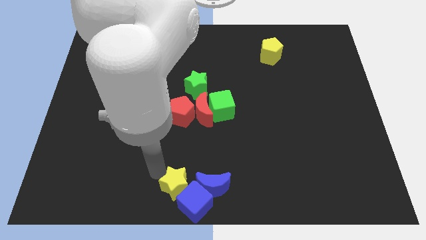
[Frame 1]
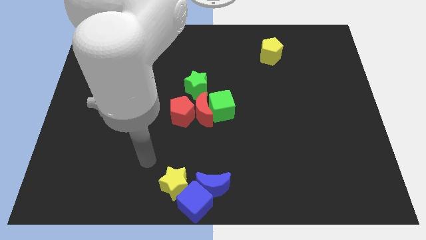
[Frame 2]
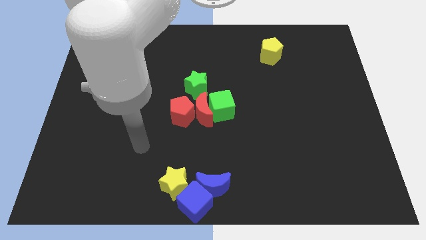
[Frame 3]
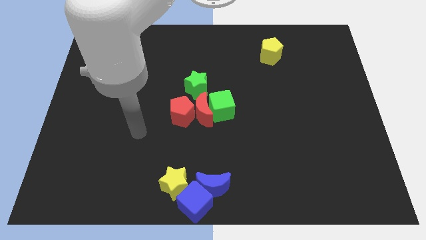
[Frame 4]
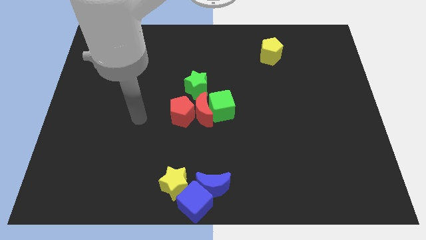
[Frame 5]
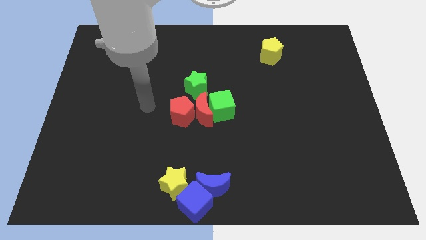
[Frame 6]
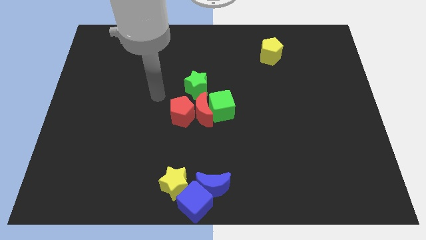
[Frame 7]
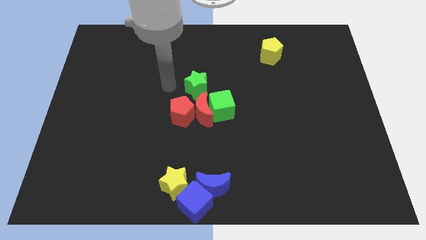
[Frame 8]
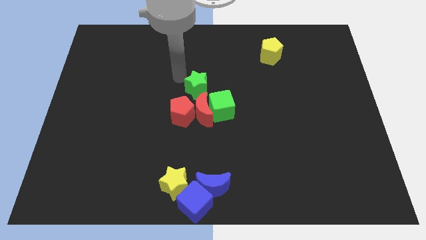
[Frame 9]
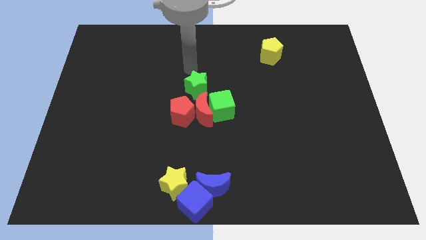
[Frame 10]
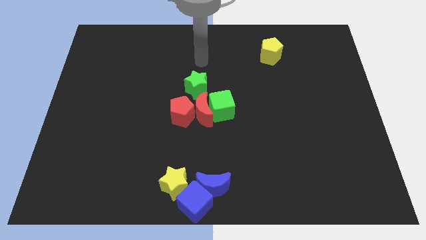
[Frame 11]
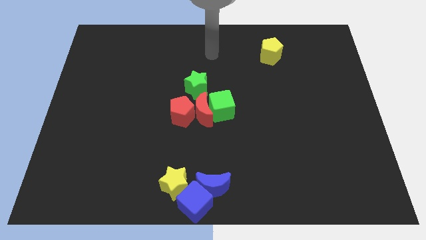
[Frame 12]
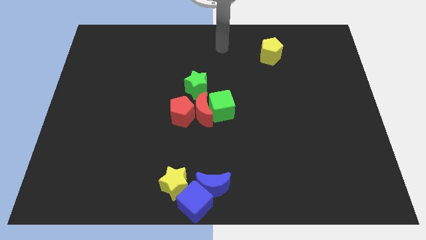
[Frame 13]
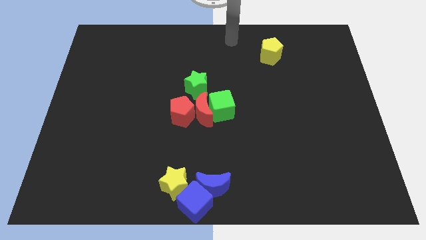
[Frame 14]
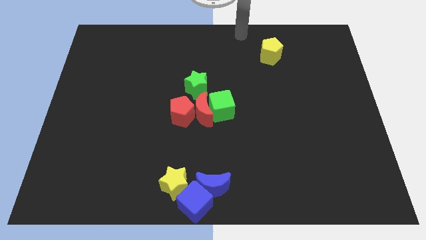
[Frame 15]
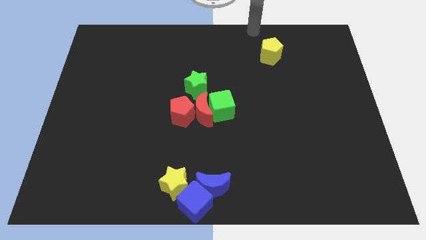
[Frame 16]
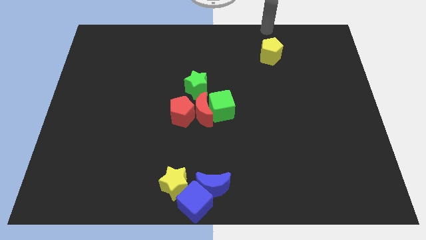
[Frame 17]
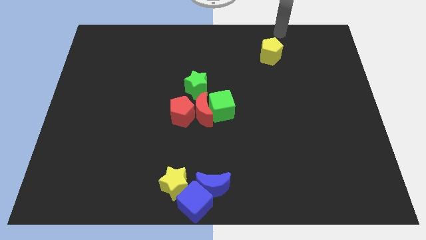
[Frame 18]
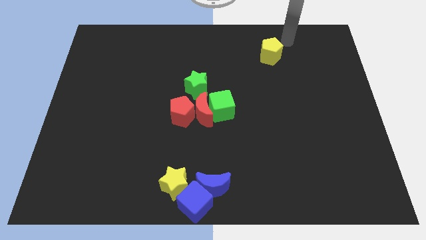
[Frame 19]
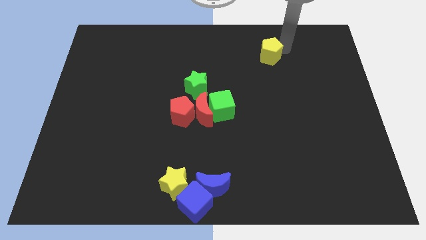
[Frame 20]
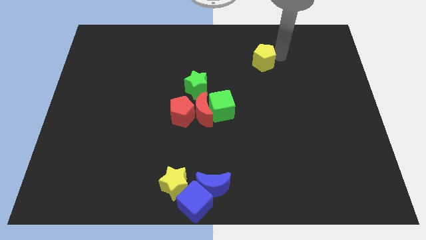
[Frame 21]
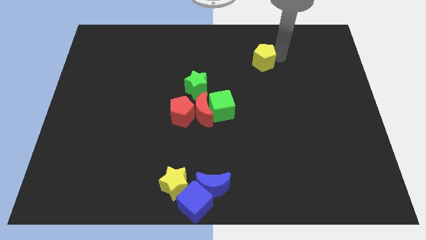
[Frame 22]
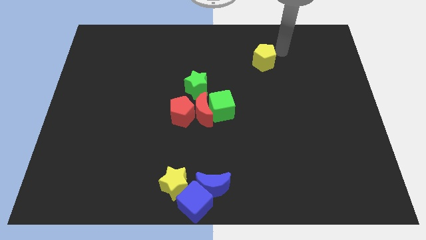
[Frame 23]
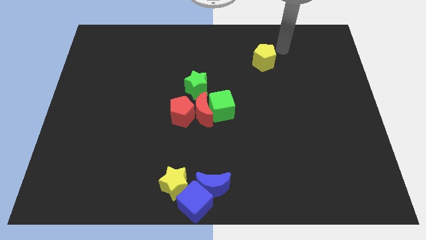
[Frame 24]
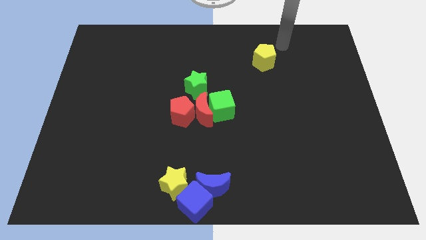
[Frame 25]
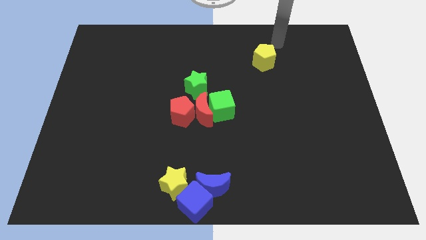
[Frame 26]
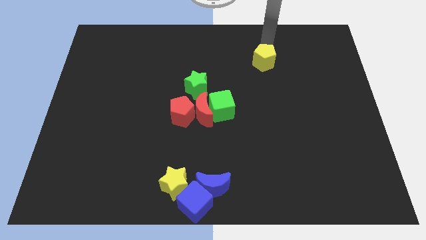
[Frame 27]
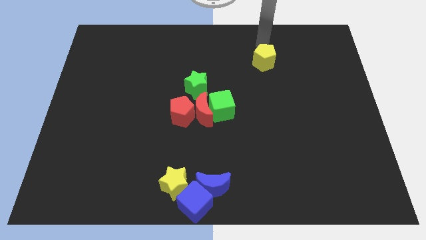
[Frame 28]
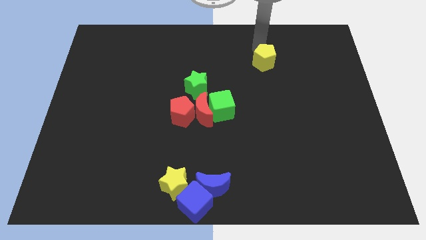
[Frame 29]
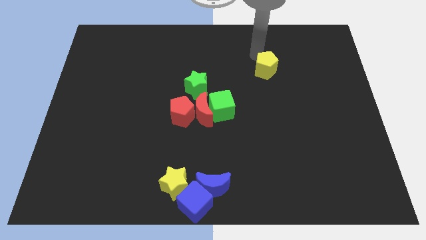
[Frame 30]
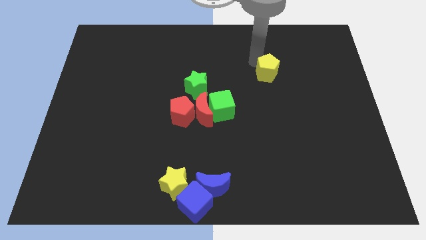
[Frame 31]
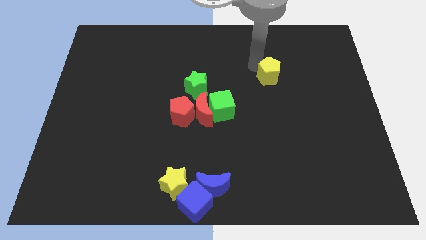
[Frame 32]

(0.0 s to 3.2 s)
move the yellow pentagon to the top right of the green cube

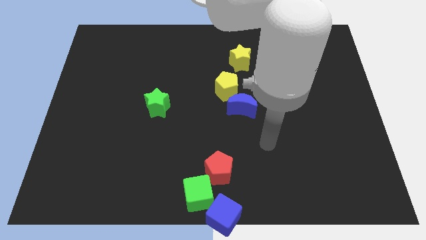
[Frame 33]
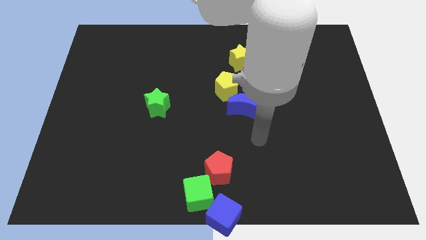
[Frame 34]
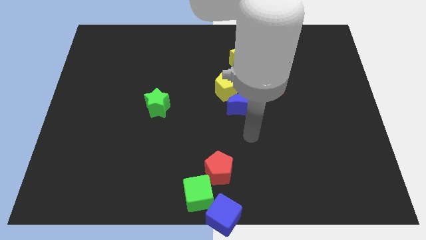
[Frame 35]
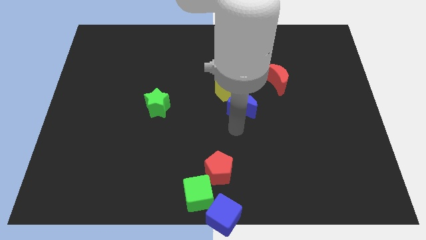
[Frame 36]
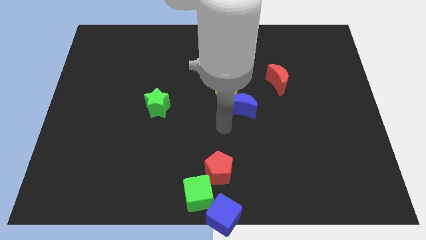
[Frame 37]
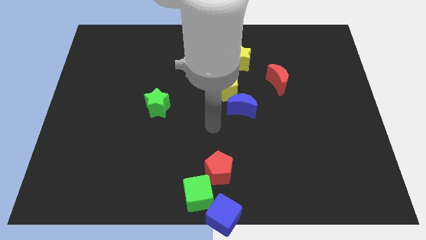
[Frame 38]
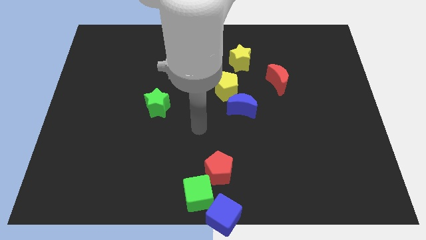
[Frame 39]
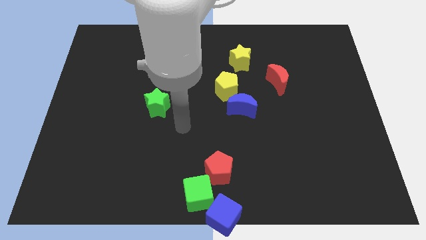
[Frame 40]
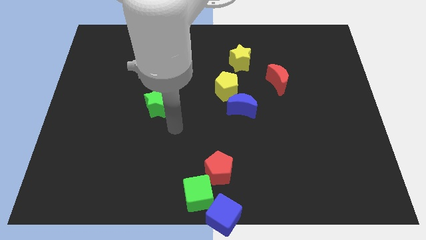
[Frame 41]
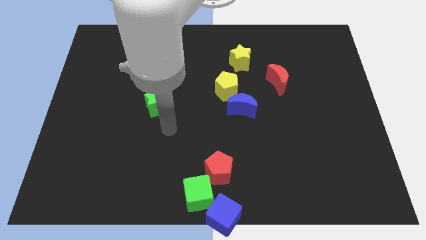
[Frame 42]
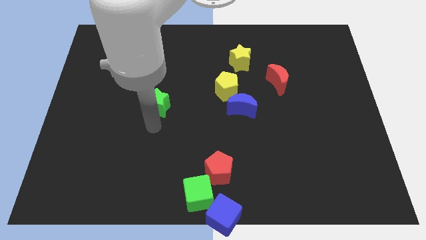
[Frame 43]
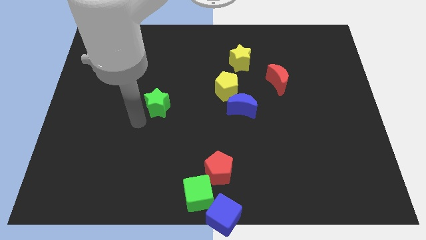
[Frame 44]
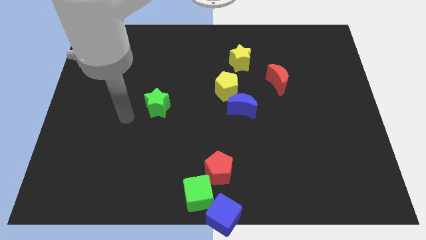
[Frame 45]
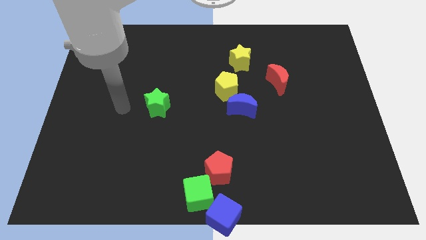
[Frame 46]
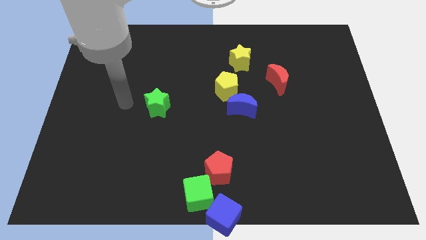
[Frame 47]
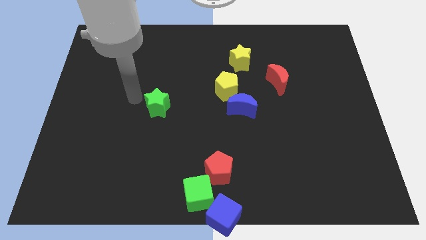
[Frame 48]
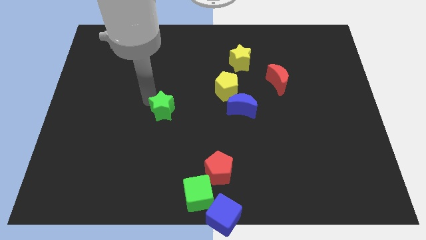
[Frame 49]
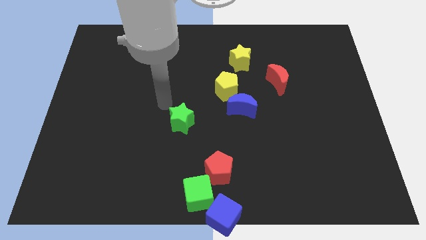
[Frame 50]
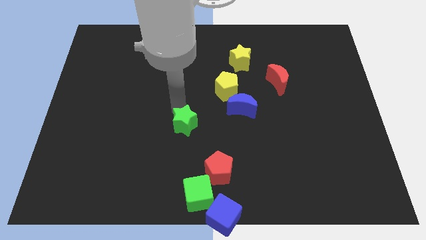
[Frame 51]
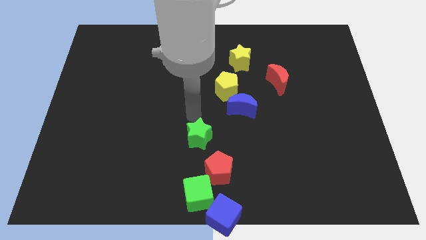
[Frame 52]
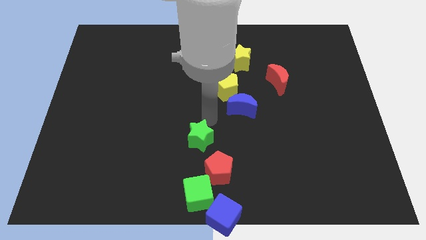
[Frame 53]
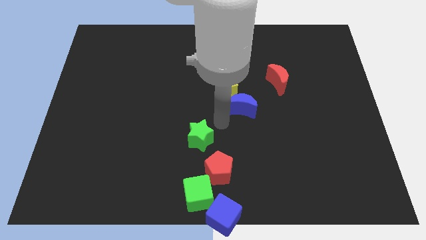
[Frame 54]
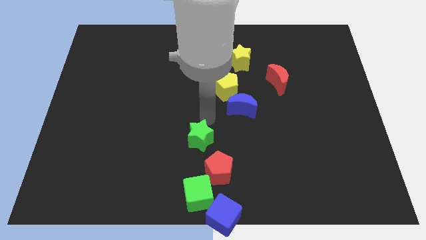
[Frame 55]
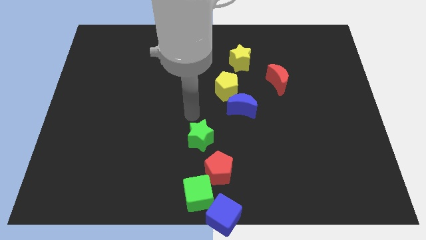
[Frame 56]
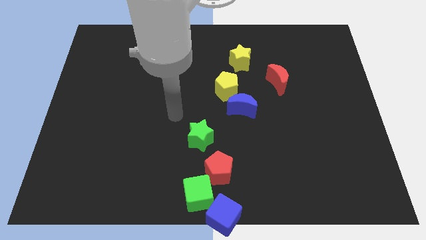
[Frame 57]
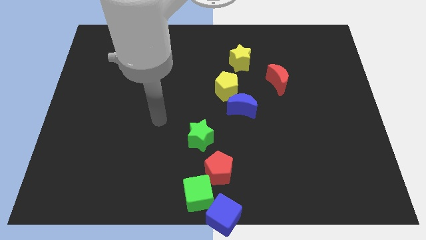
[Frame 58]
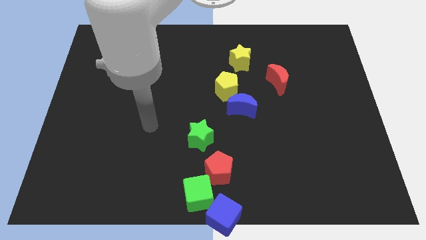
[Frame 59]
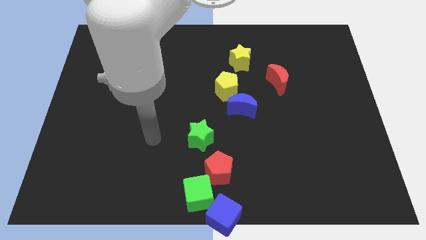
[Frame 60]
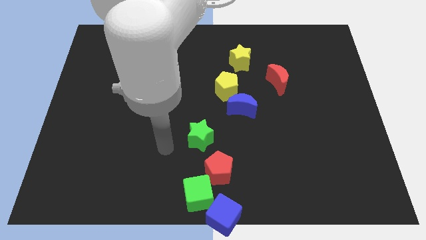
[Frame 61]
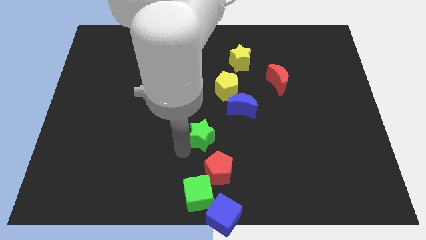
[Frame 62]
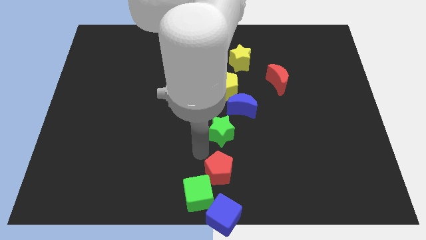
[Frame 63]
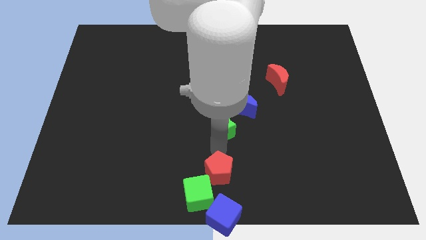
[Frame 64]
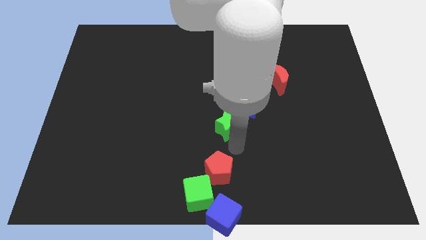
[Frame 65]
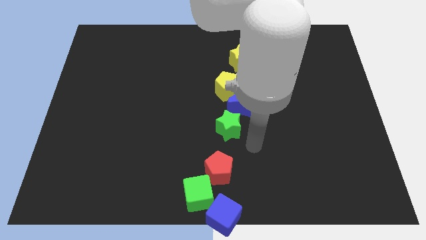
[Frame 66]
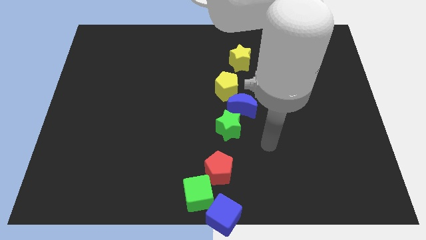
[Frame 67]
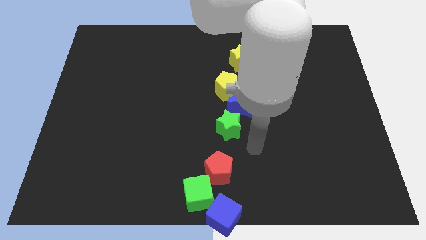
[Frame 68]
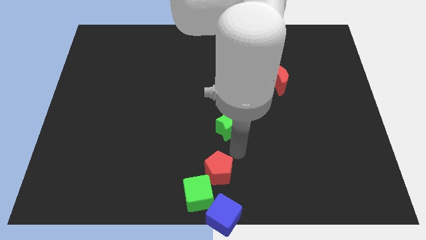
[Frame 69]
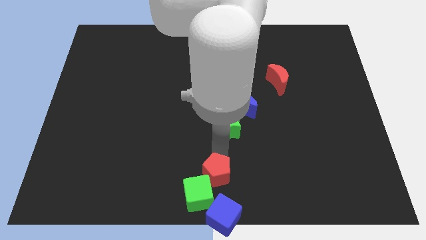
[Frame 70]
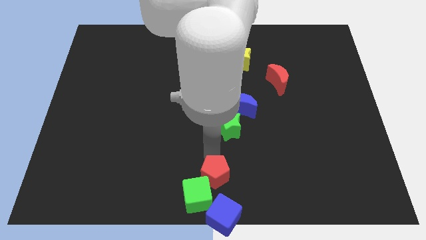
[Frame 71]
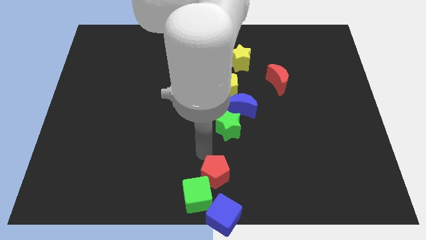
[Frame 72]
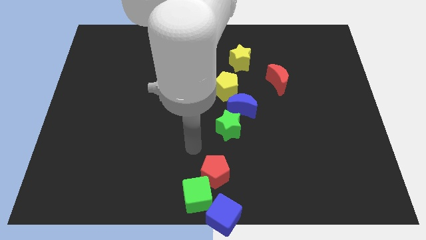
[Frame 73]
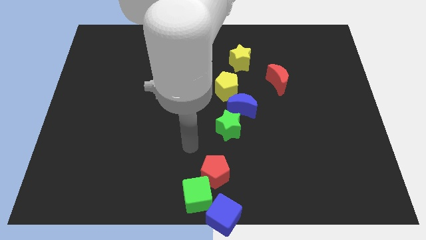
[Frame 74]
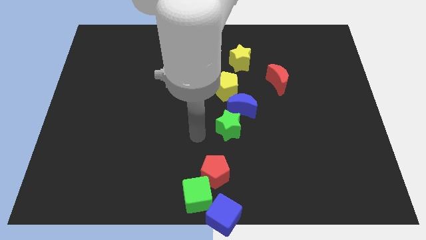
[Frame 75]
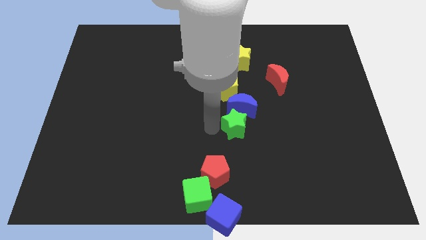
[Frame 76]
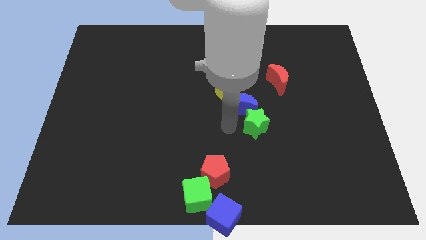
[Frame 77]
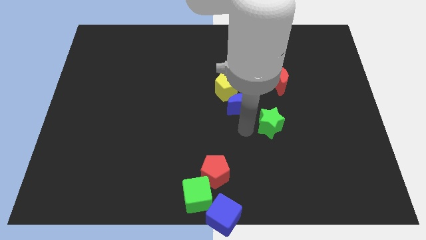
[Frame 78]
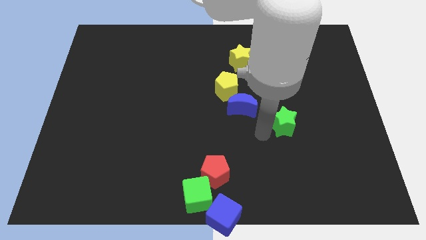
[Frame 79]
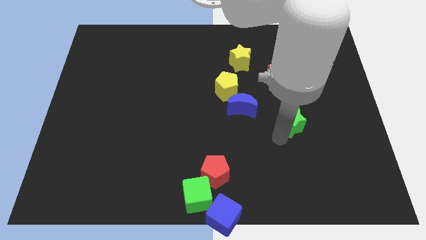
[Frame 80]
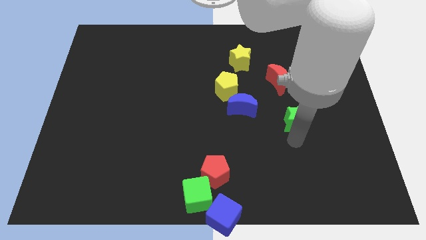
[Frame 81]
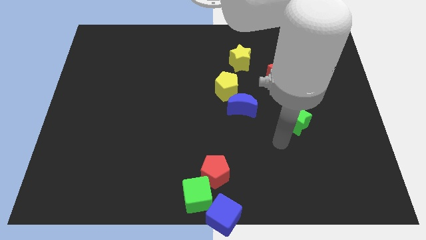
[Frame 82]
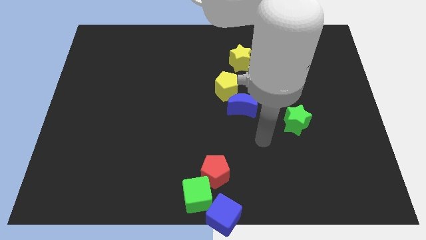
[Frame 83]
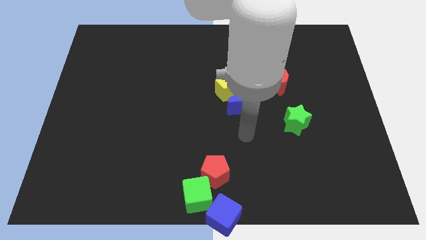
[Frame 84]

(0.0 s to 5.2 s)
move the green star slightly down right to the red crescent

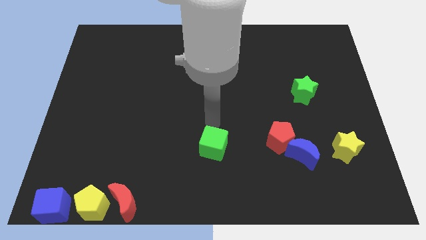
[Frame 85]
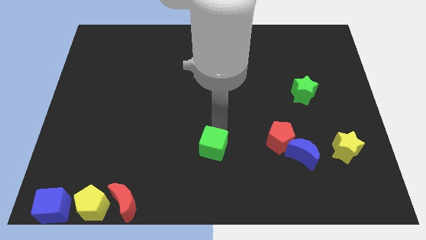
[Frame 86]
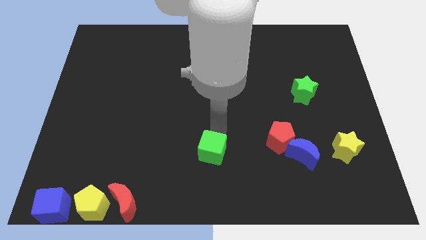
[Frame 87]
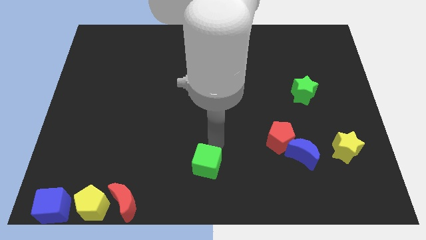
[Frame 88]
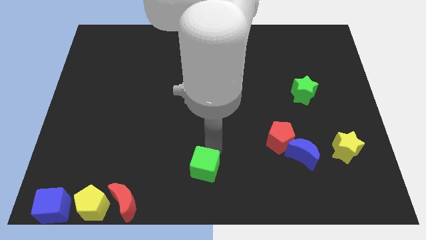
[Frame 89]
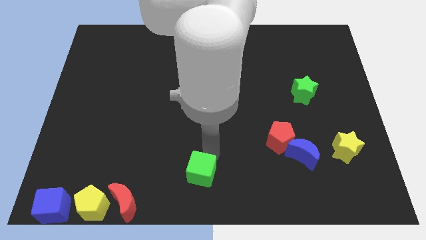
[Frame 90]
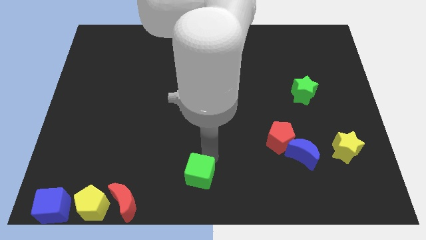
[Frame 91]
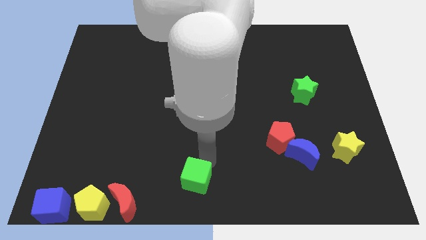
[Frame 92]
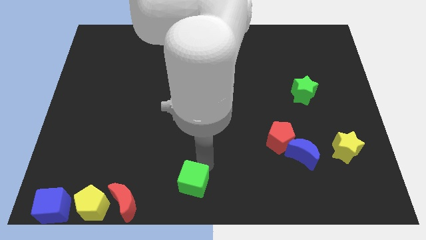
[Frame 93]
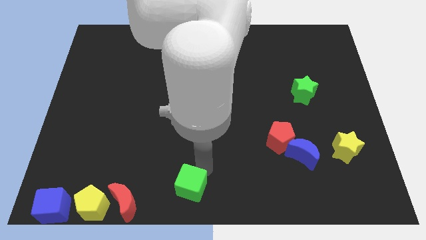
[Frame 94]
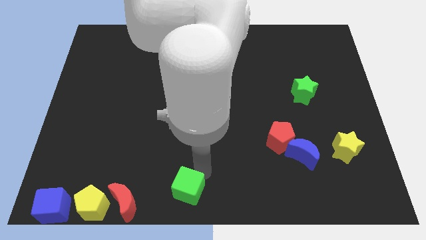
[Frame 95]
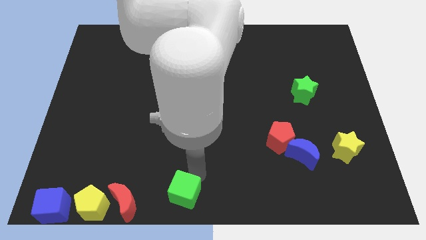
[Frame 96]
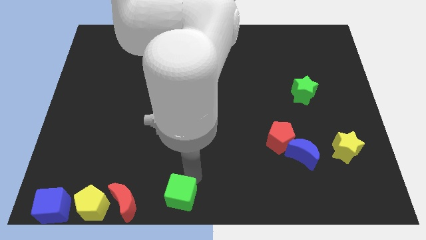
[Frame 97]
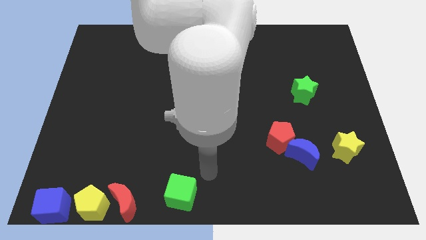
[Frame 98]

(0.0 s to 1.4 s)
move the green cube slightly down
